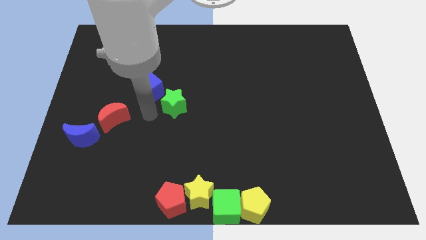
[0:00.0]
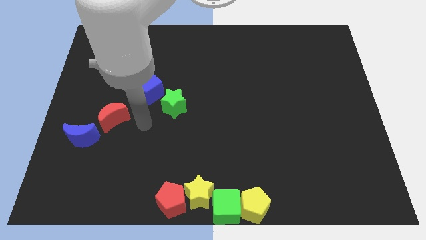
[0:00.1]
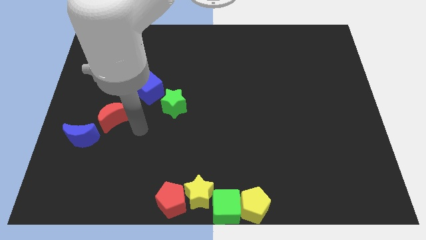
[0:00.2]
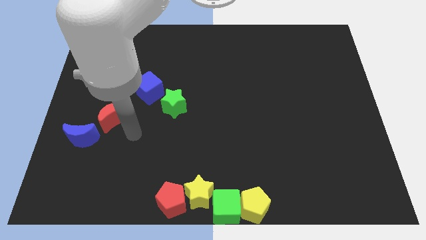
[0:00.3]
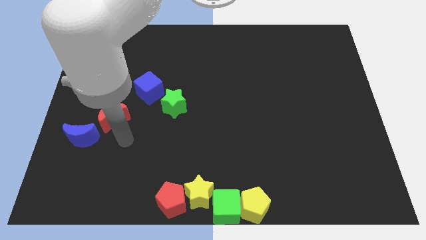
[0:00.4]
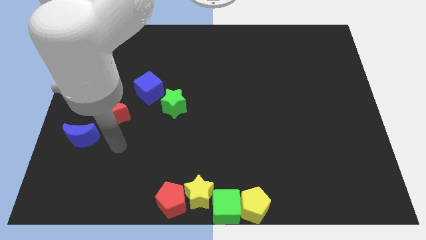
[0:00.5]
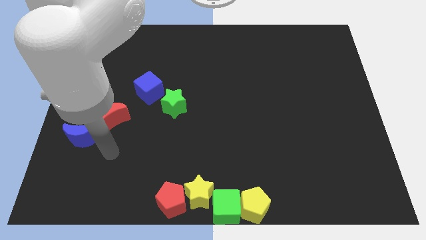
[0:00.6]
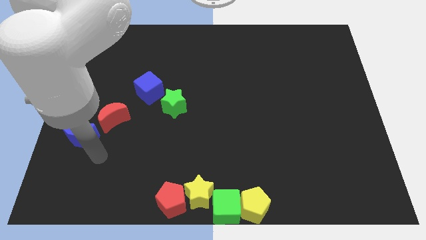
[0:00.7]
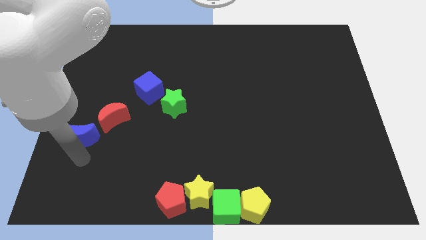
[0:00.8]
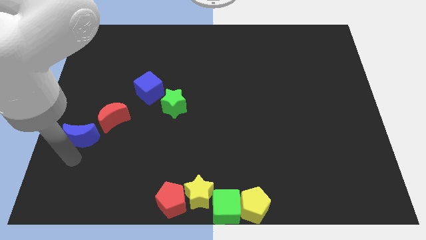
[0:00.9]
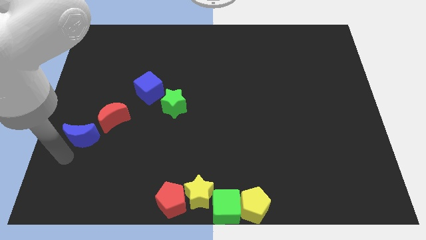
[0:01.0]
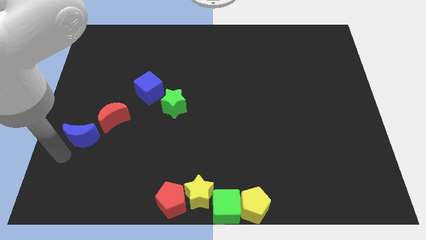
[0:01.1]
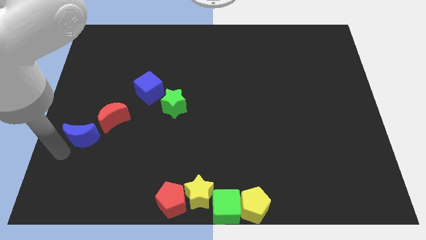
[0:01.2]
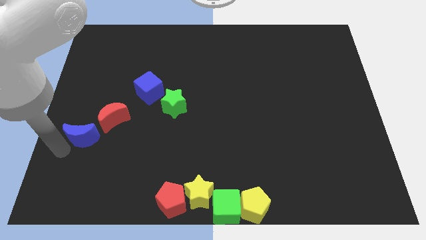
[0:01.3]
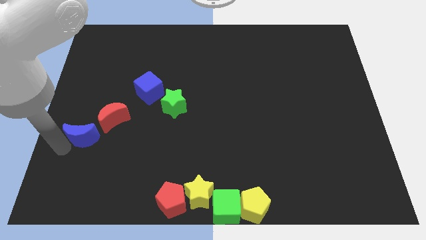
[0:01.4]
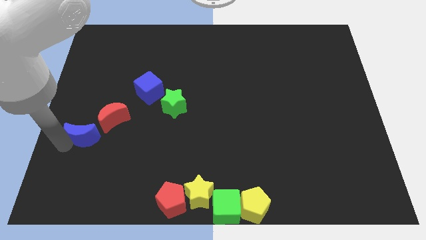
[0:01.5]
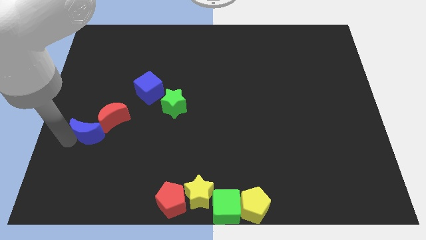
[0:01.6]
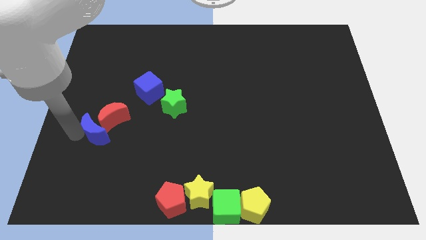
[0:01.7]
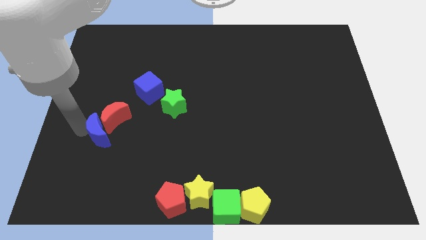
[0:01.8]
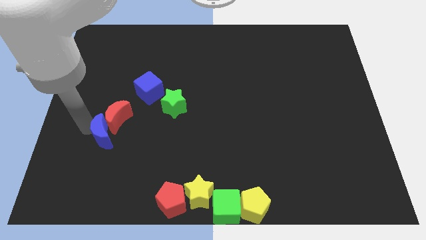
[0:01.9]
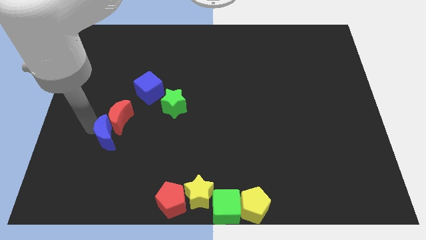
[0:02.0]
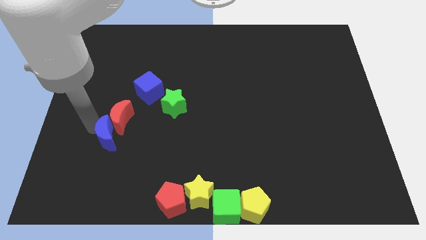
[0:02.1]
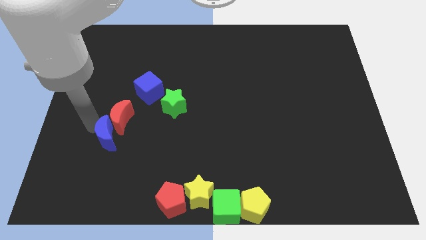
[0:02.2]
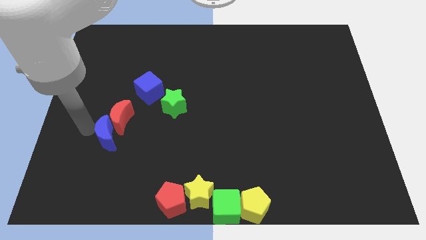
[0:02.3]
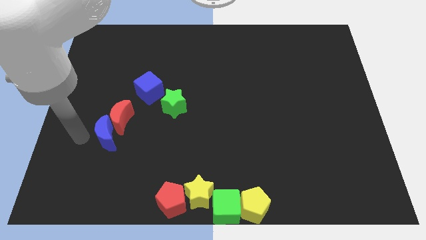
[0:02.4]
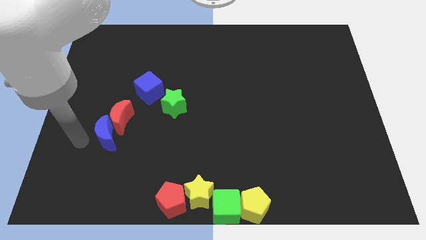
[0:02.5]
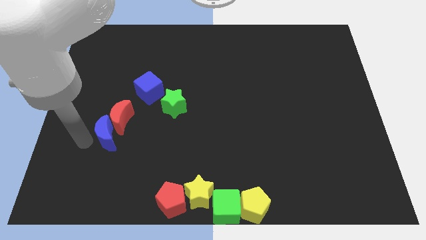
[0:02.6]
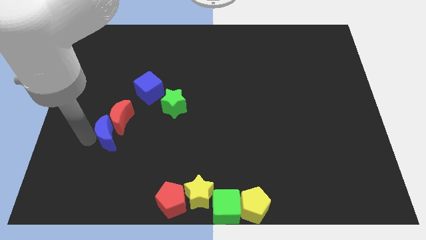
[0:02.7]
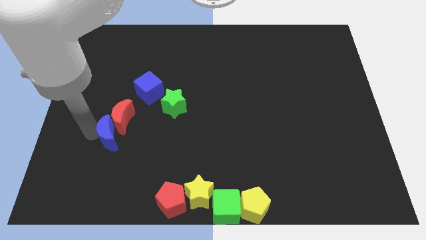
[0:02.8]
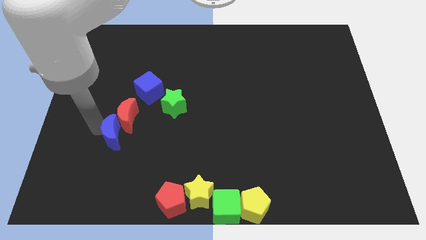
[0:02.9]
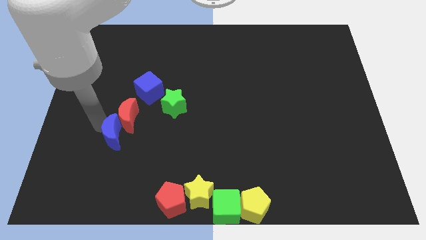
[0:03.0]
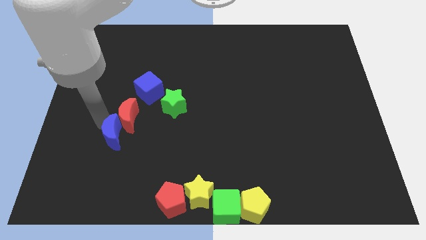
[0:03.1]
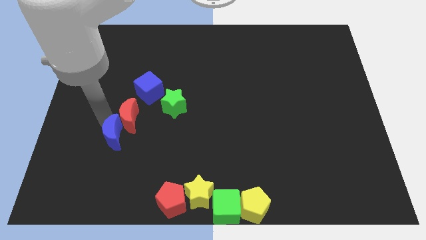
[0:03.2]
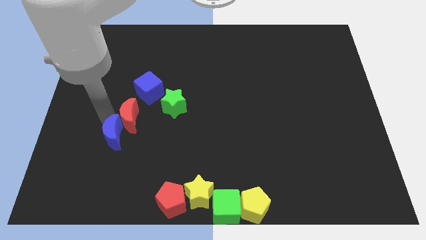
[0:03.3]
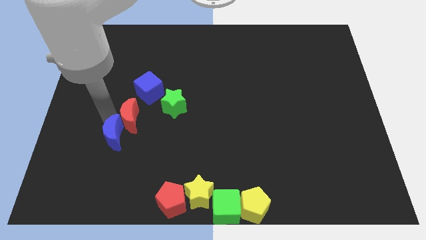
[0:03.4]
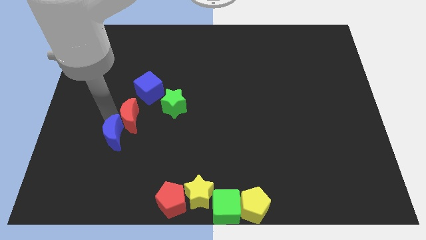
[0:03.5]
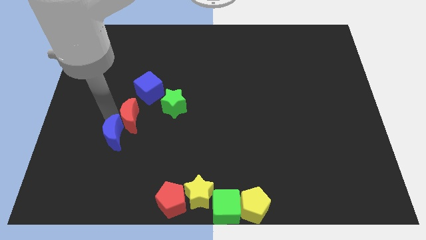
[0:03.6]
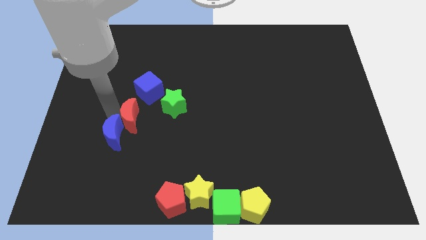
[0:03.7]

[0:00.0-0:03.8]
push the blue crescent into the red crescent

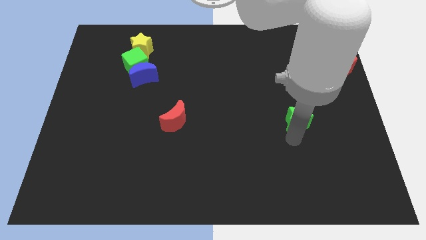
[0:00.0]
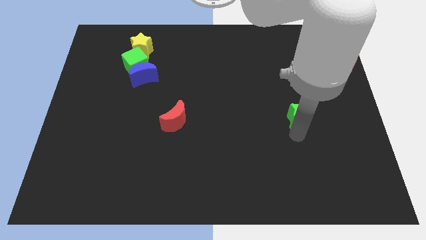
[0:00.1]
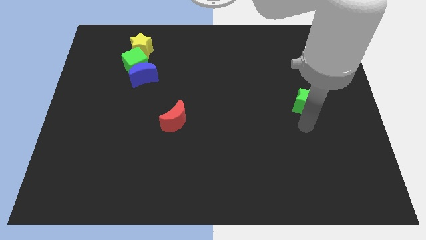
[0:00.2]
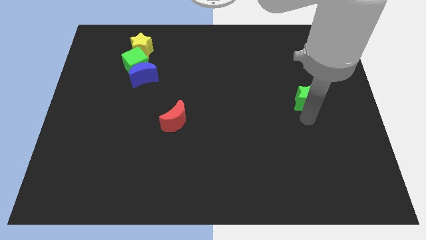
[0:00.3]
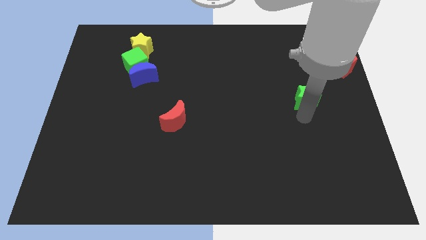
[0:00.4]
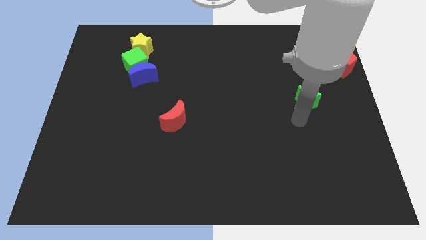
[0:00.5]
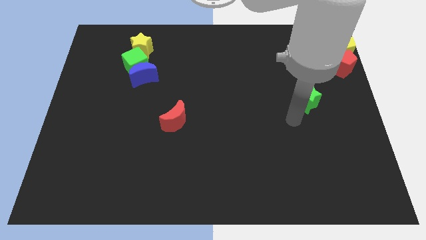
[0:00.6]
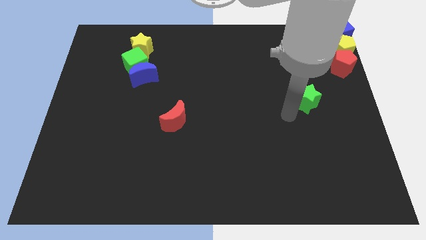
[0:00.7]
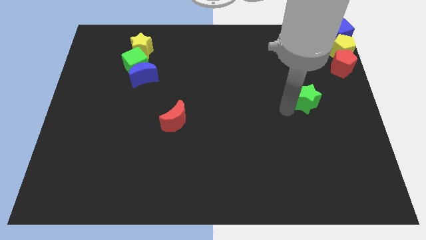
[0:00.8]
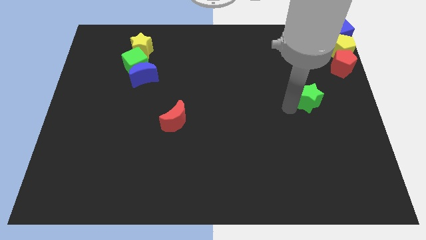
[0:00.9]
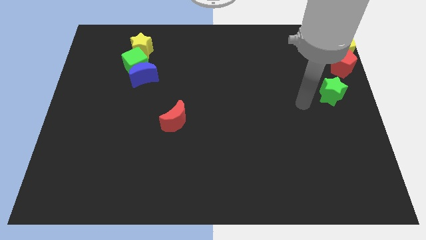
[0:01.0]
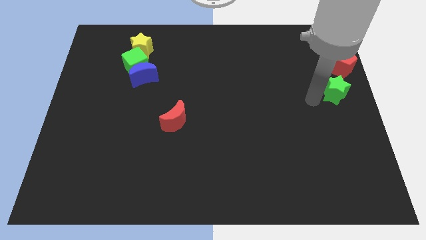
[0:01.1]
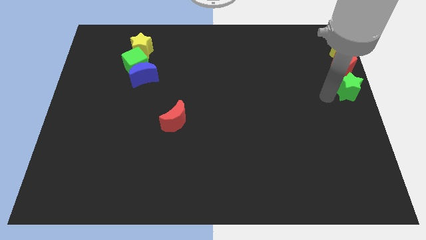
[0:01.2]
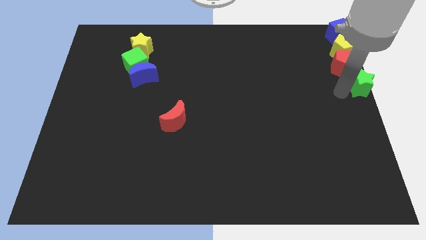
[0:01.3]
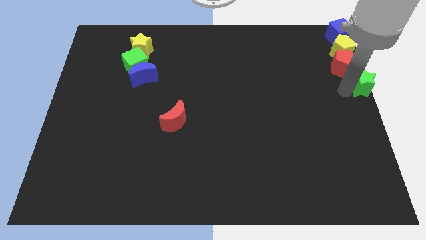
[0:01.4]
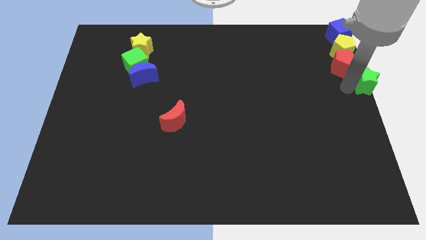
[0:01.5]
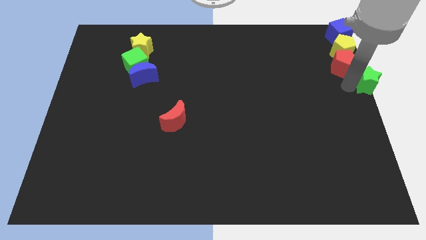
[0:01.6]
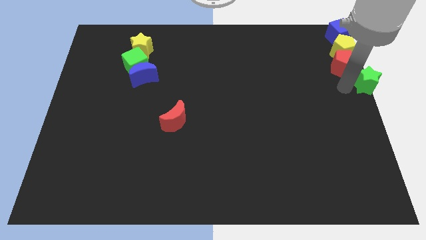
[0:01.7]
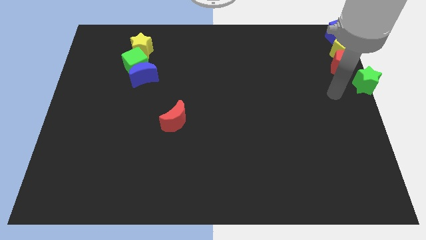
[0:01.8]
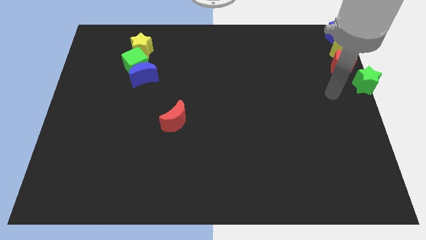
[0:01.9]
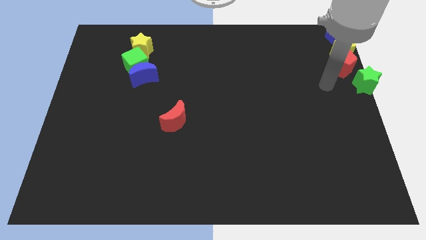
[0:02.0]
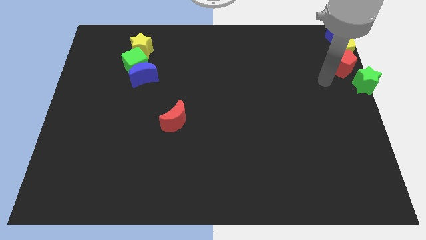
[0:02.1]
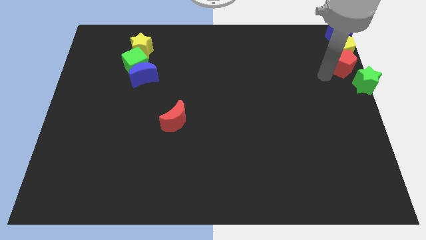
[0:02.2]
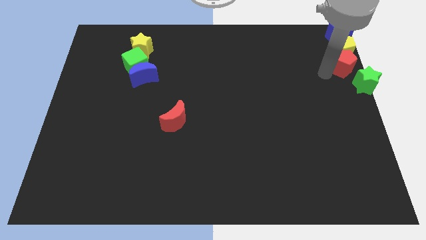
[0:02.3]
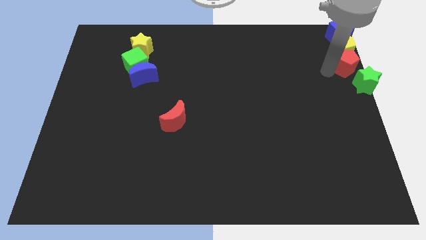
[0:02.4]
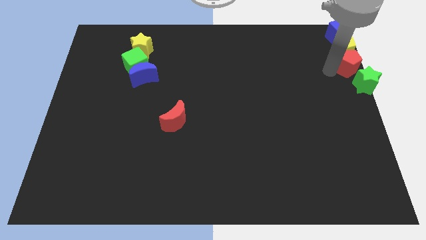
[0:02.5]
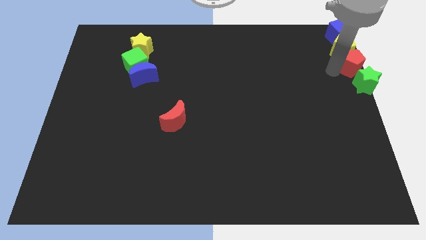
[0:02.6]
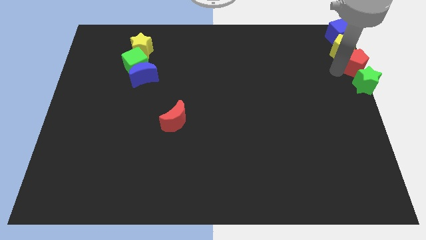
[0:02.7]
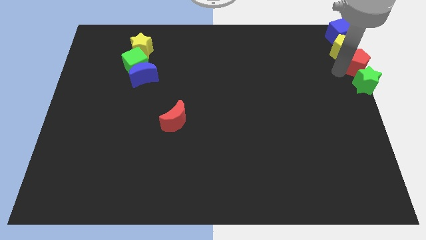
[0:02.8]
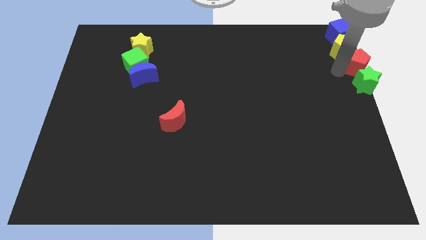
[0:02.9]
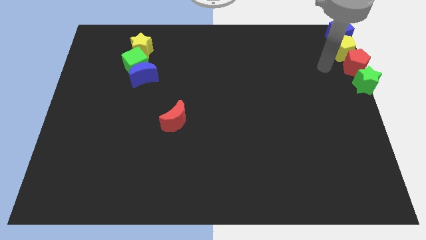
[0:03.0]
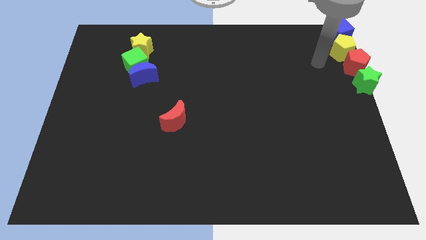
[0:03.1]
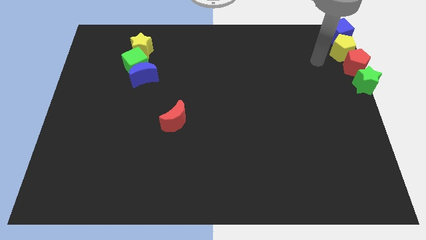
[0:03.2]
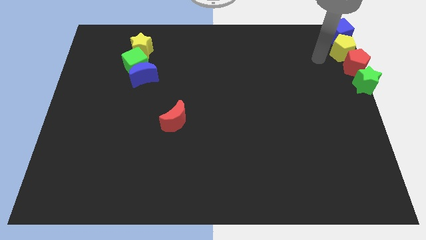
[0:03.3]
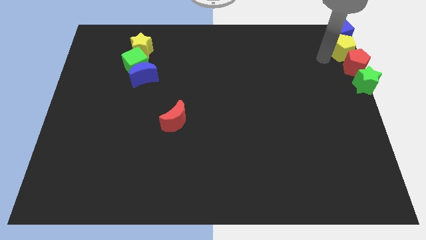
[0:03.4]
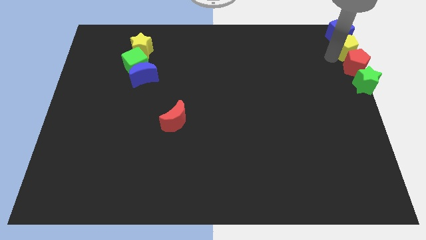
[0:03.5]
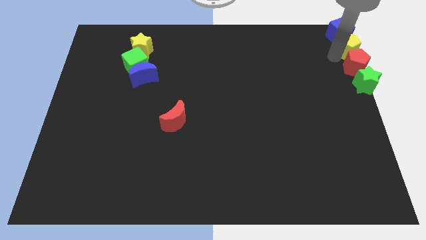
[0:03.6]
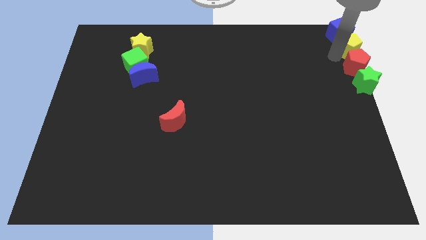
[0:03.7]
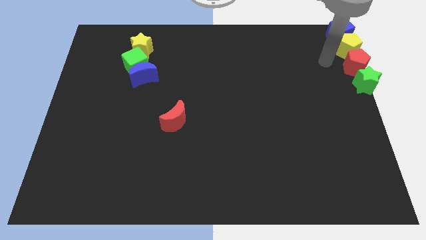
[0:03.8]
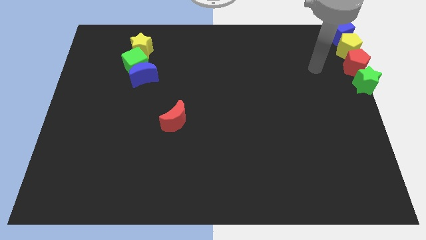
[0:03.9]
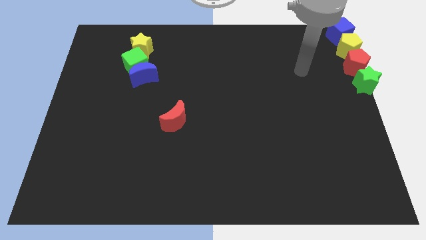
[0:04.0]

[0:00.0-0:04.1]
place the green star vertically below the red pentagon

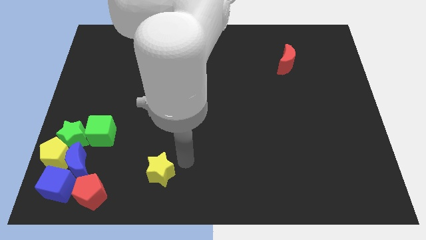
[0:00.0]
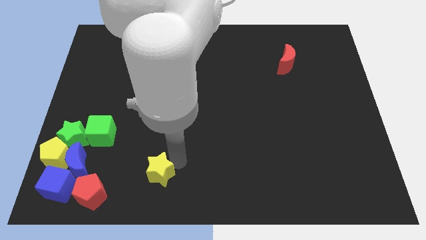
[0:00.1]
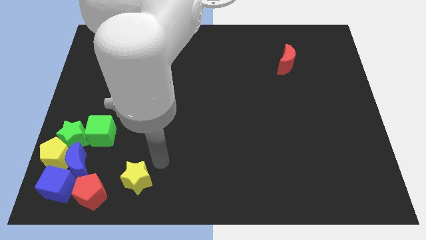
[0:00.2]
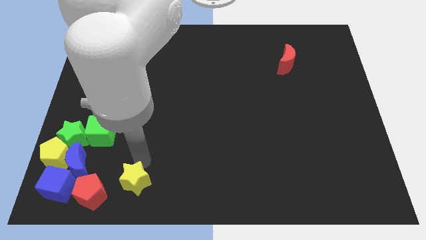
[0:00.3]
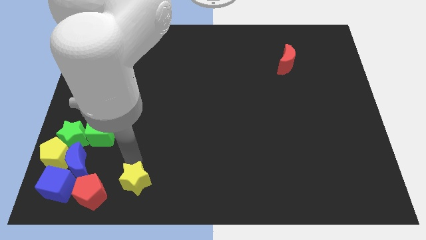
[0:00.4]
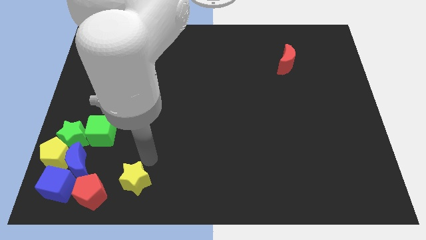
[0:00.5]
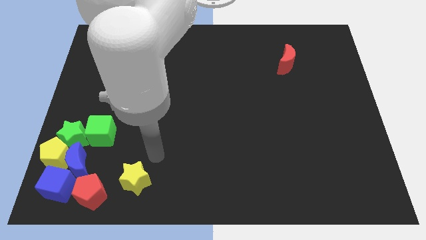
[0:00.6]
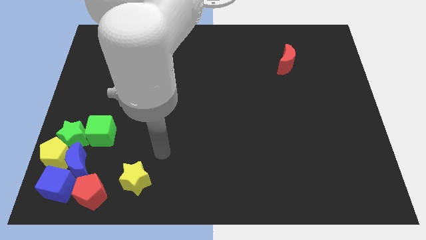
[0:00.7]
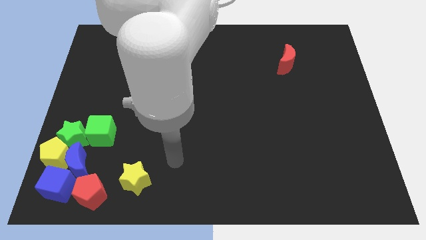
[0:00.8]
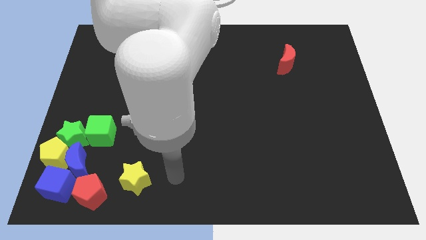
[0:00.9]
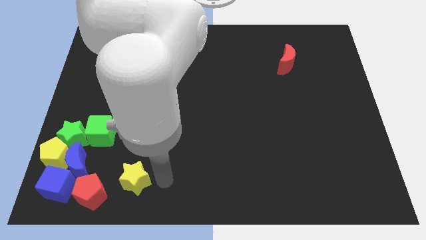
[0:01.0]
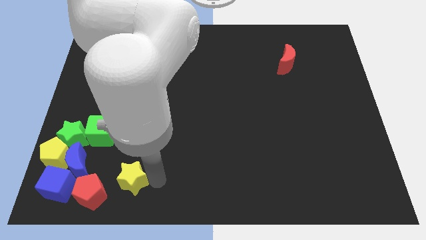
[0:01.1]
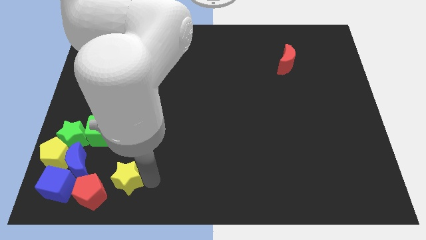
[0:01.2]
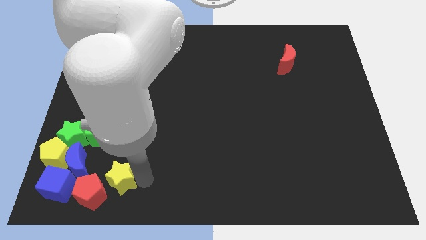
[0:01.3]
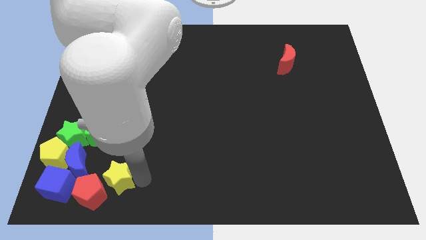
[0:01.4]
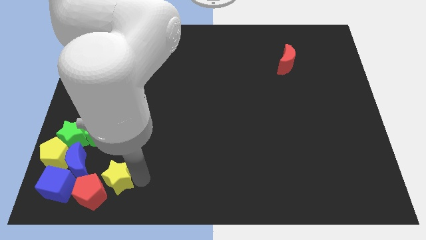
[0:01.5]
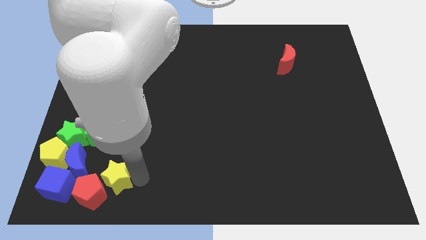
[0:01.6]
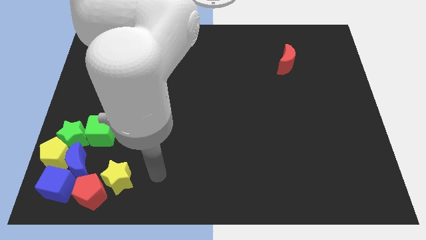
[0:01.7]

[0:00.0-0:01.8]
place the yellow star diagonally to the red pentagon
